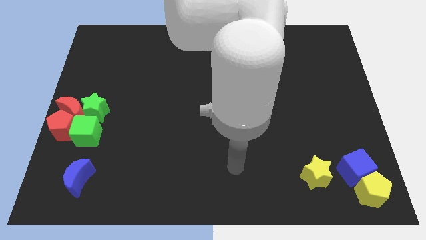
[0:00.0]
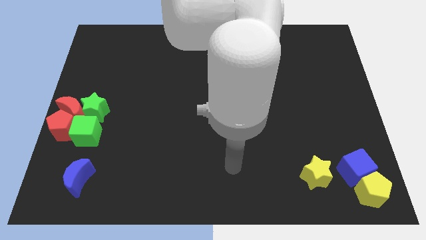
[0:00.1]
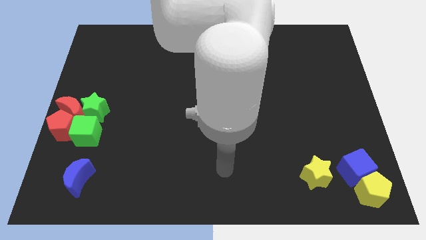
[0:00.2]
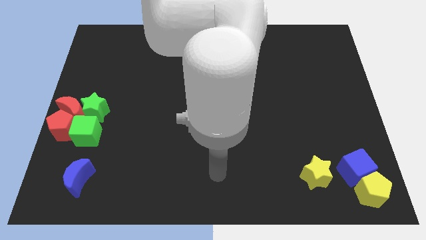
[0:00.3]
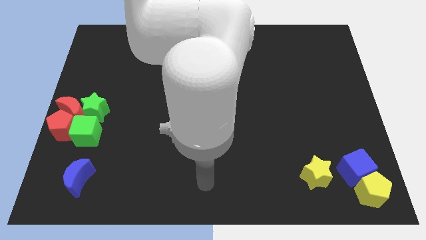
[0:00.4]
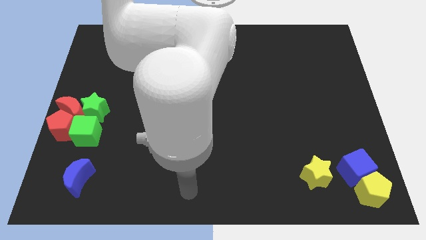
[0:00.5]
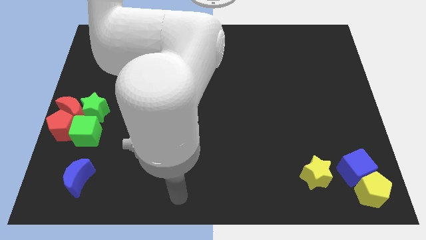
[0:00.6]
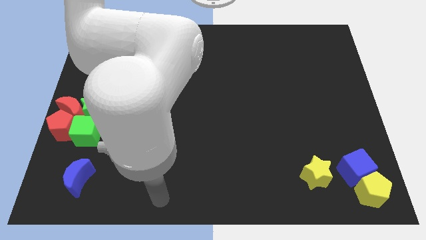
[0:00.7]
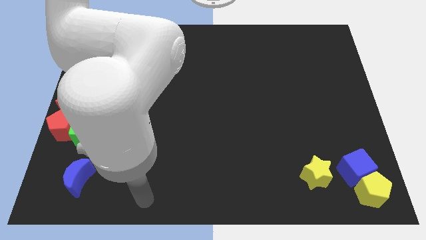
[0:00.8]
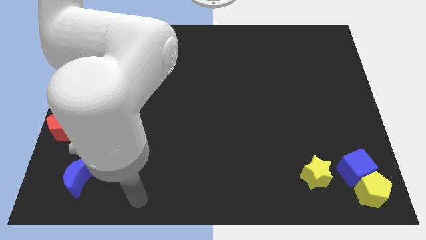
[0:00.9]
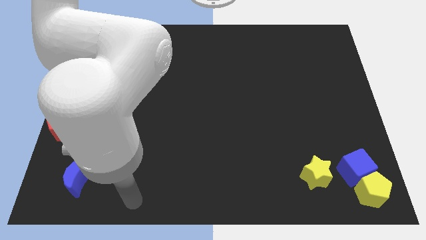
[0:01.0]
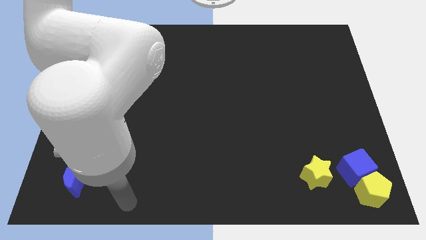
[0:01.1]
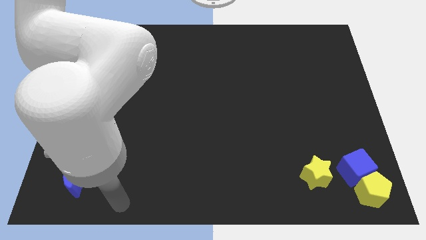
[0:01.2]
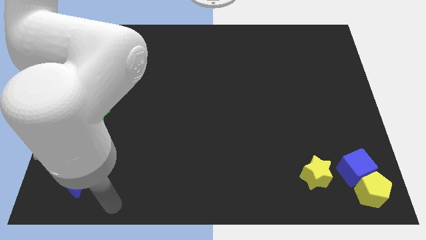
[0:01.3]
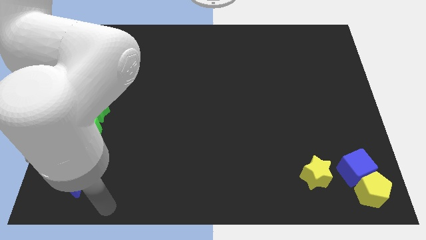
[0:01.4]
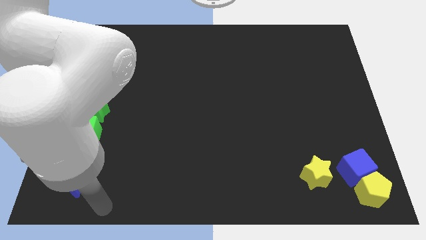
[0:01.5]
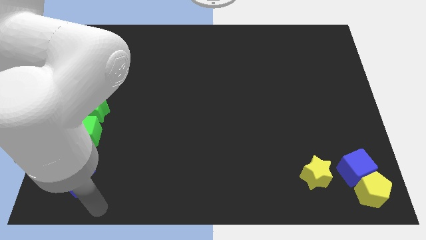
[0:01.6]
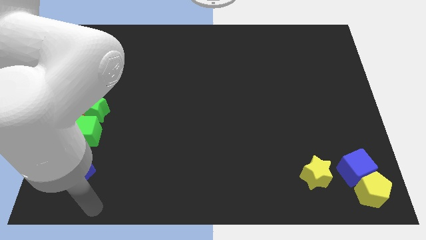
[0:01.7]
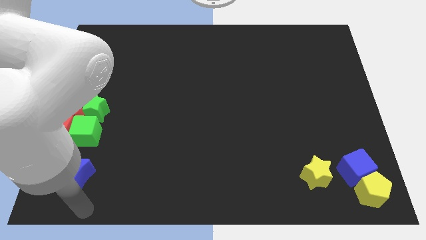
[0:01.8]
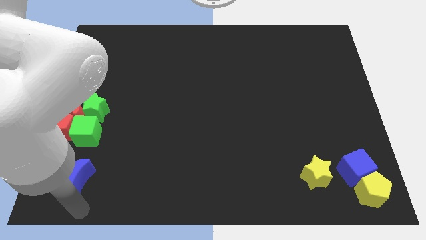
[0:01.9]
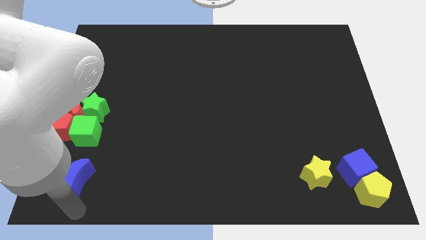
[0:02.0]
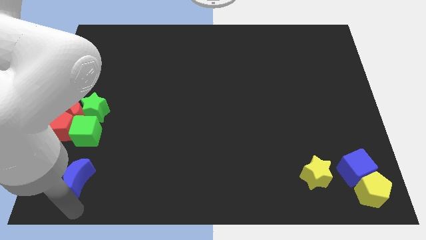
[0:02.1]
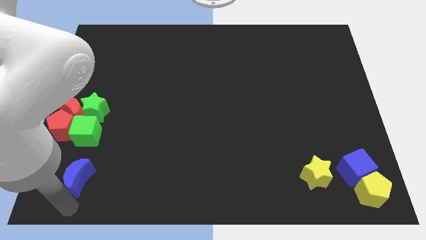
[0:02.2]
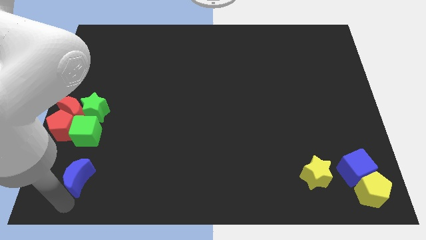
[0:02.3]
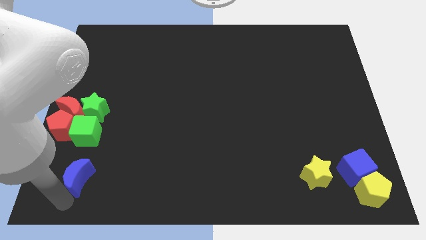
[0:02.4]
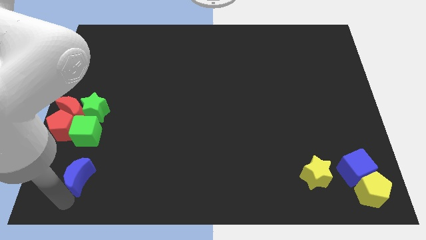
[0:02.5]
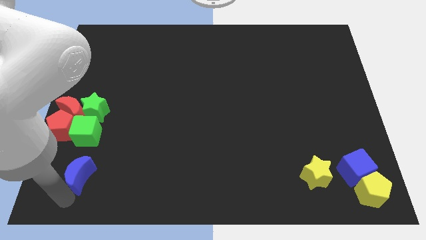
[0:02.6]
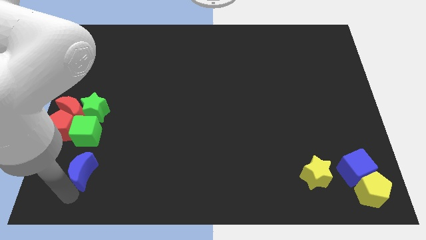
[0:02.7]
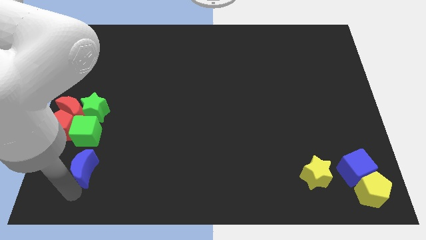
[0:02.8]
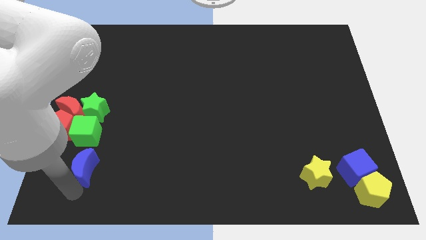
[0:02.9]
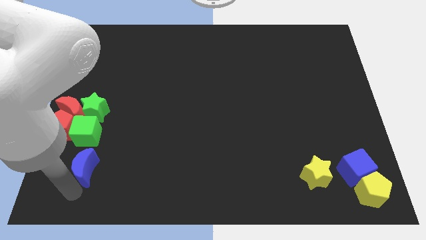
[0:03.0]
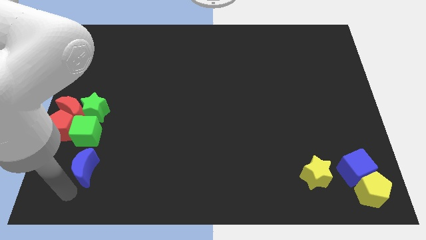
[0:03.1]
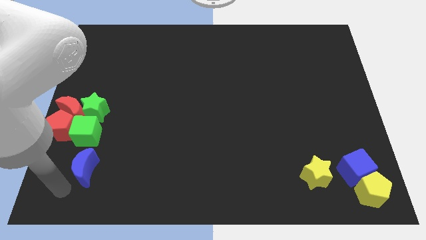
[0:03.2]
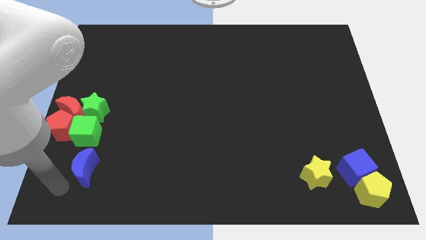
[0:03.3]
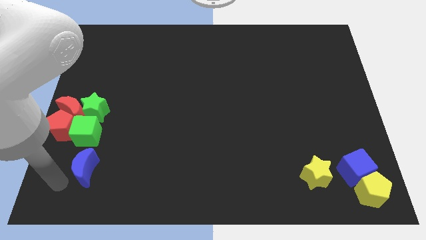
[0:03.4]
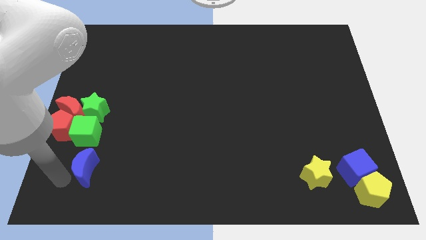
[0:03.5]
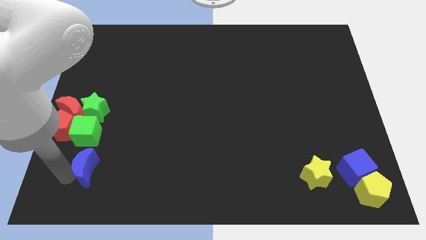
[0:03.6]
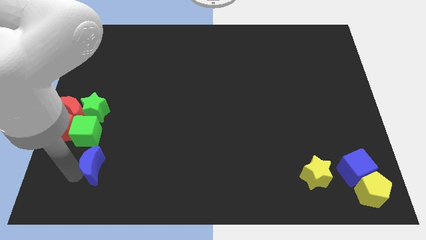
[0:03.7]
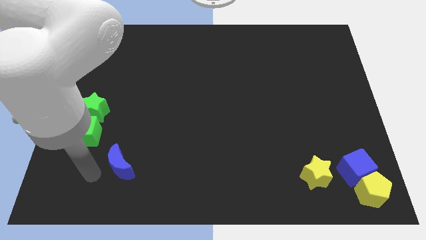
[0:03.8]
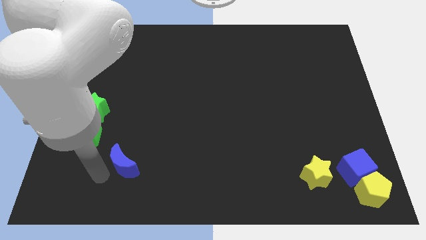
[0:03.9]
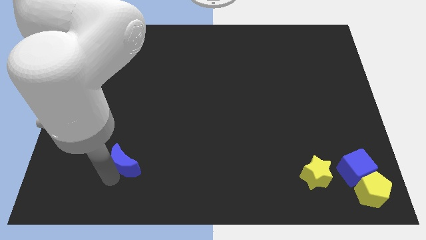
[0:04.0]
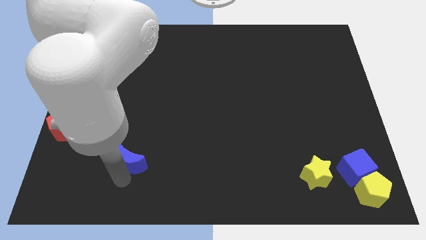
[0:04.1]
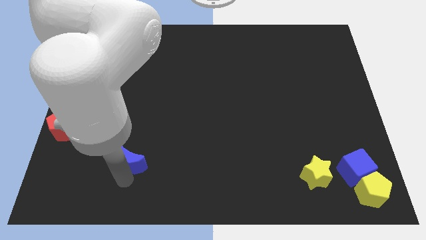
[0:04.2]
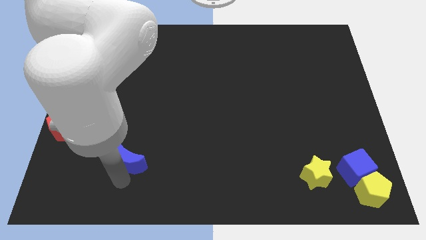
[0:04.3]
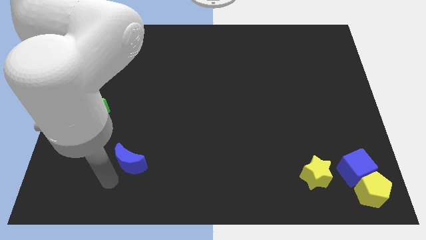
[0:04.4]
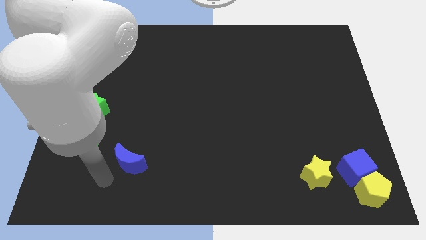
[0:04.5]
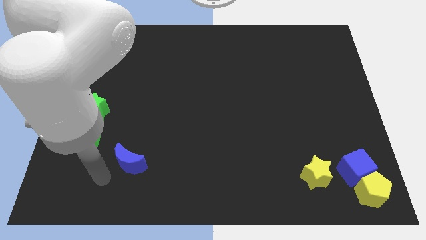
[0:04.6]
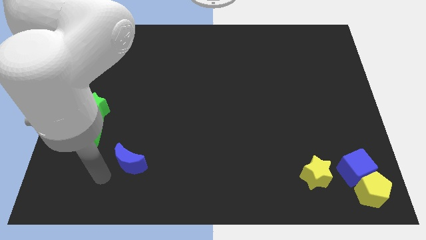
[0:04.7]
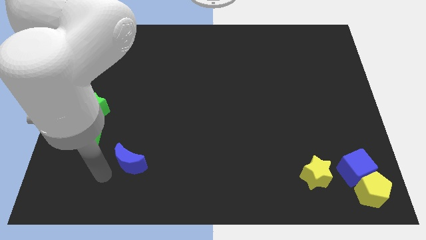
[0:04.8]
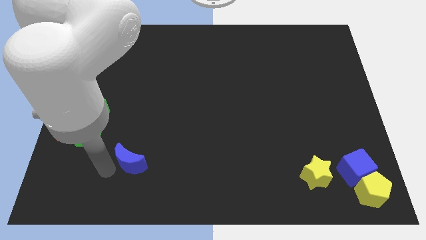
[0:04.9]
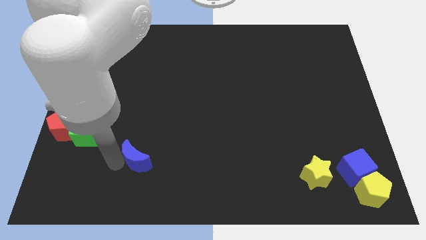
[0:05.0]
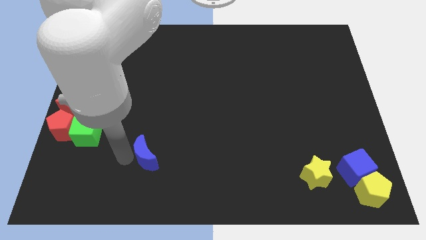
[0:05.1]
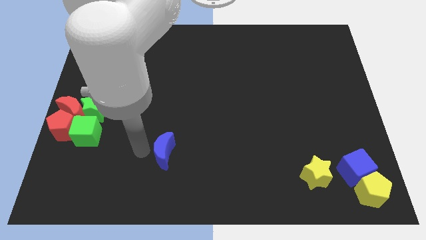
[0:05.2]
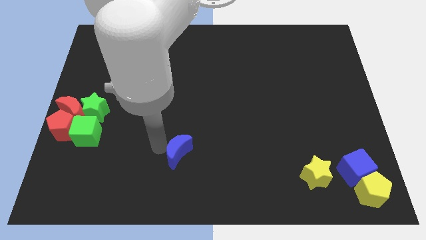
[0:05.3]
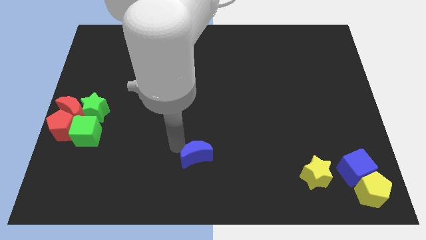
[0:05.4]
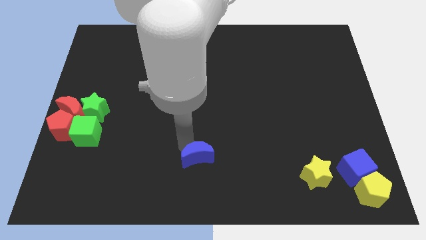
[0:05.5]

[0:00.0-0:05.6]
slide the blue moon diagonally bottom right to the green cube

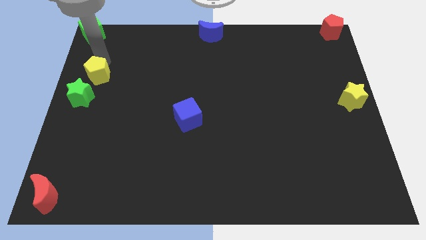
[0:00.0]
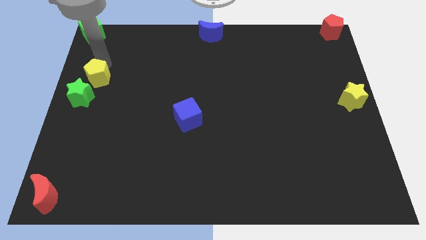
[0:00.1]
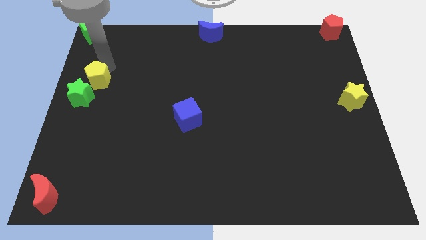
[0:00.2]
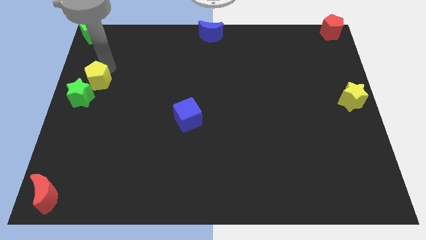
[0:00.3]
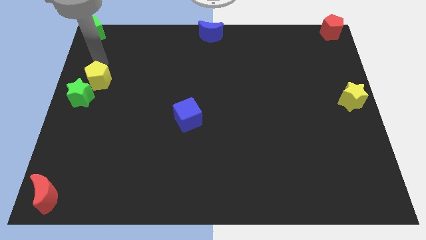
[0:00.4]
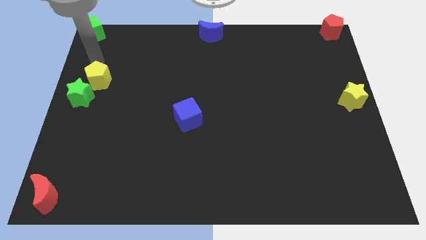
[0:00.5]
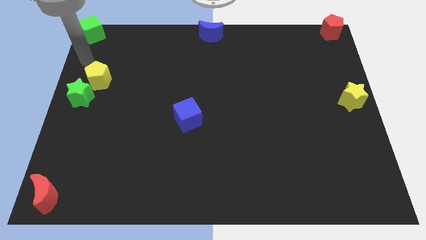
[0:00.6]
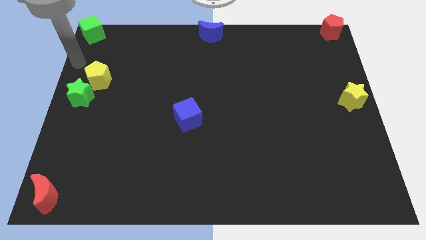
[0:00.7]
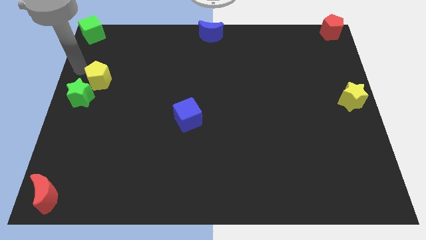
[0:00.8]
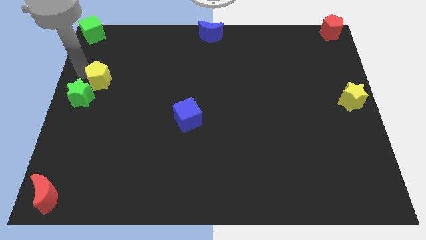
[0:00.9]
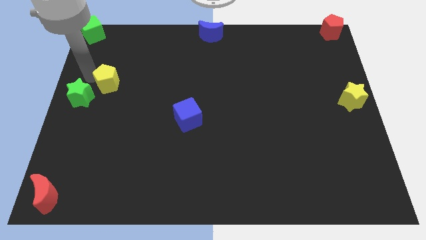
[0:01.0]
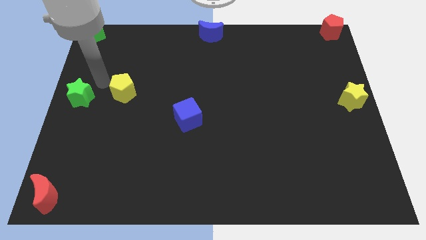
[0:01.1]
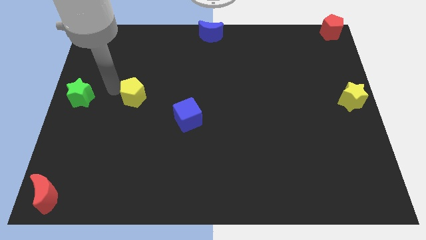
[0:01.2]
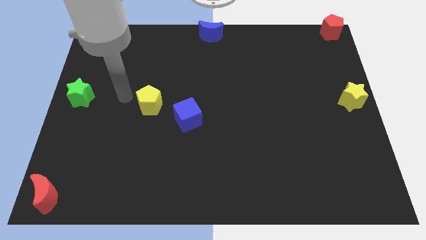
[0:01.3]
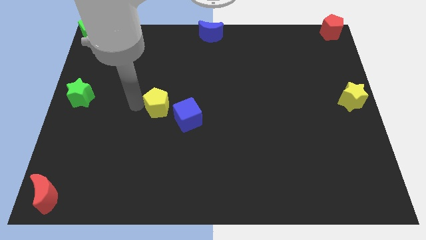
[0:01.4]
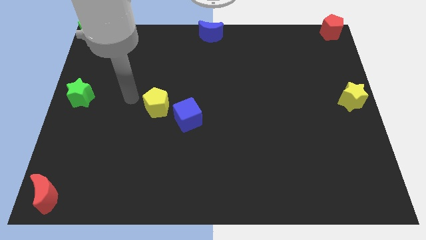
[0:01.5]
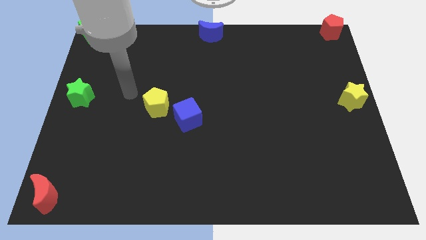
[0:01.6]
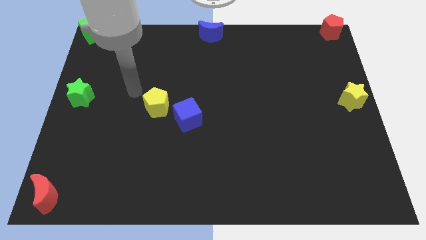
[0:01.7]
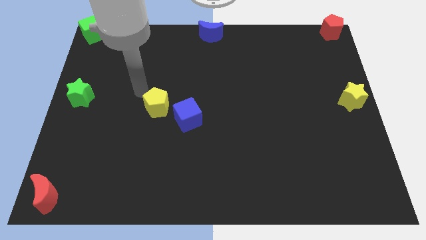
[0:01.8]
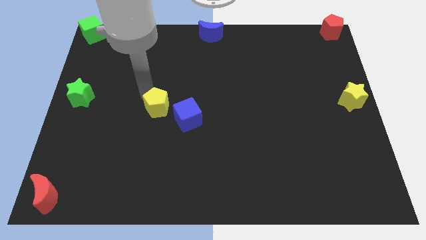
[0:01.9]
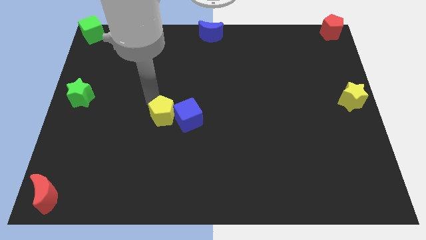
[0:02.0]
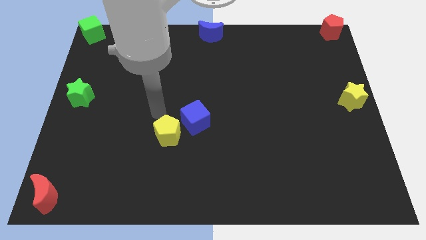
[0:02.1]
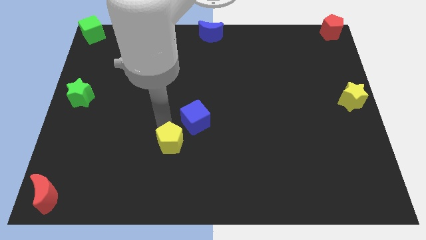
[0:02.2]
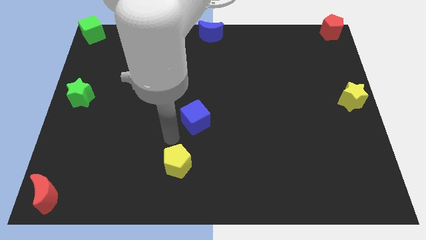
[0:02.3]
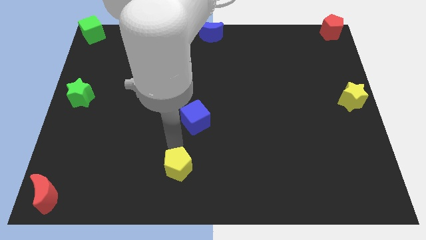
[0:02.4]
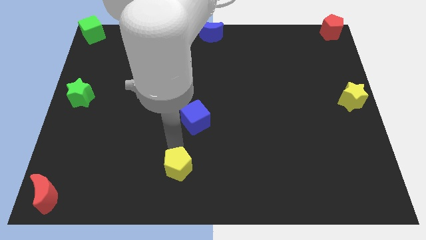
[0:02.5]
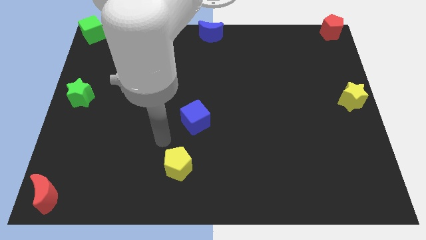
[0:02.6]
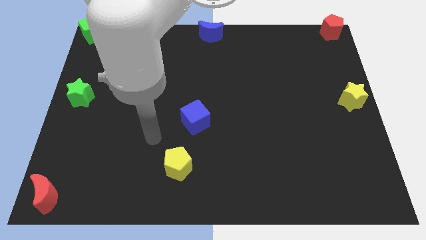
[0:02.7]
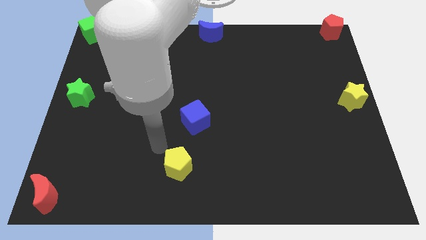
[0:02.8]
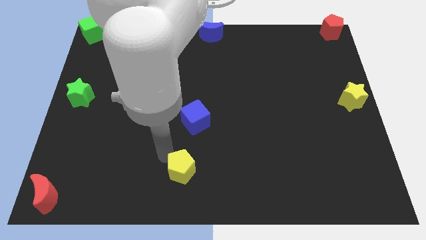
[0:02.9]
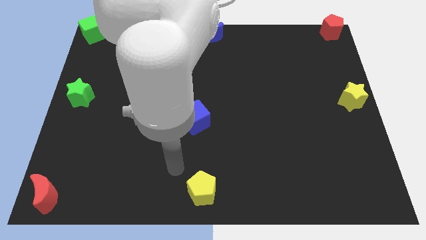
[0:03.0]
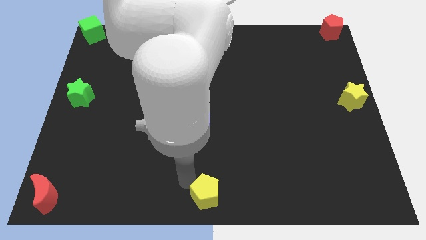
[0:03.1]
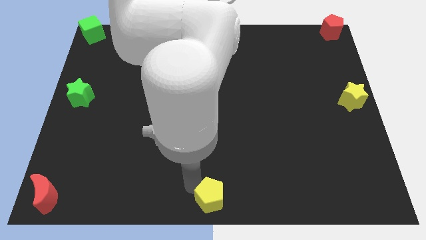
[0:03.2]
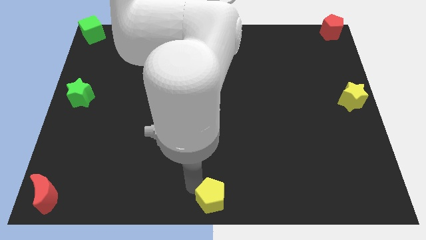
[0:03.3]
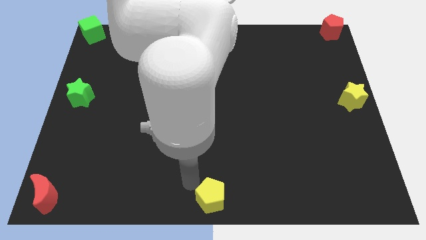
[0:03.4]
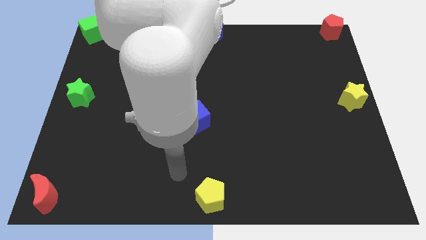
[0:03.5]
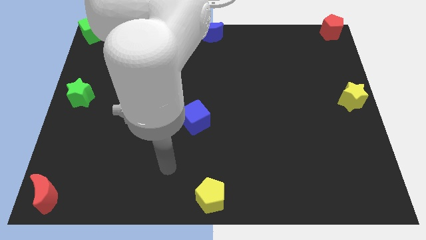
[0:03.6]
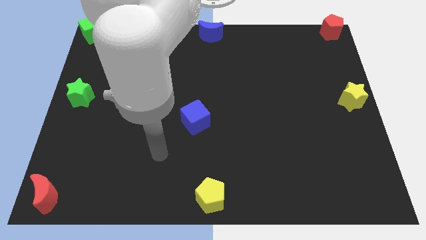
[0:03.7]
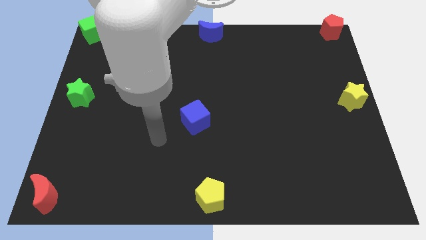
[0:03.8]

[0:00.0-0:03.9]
place the yellow pentagon to the bottom center of the board
